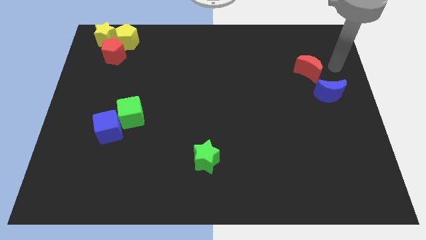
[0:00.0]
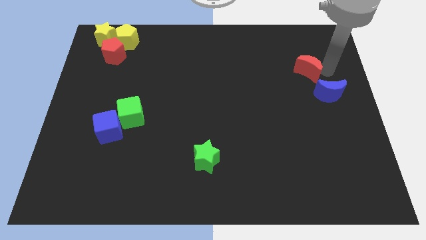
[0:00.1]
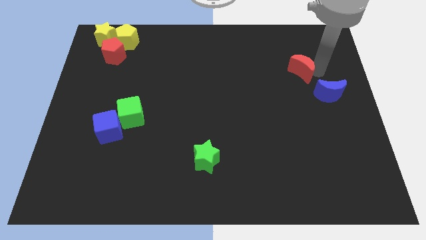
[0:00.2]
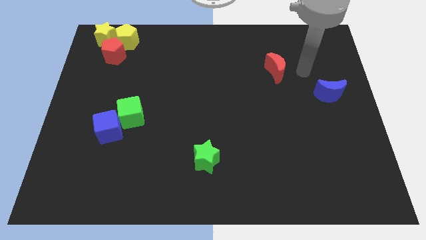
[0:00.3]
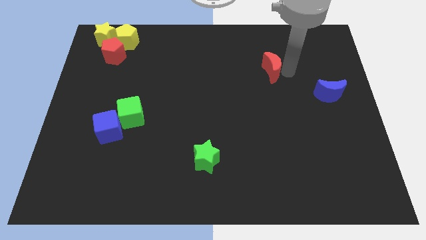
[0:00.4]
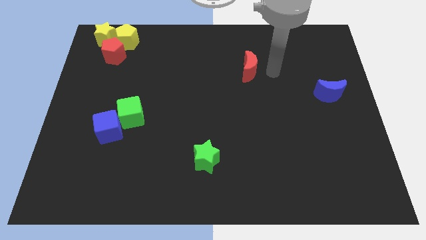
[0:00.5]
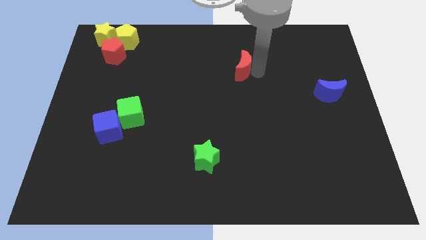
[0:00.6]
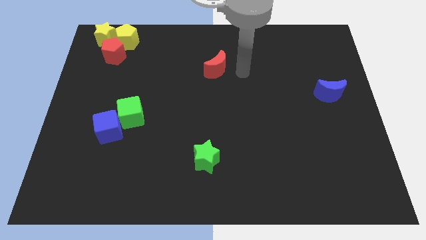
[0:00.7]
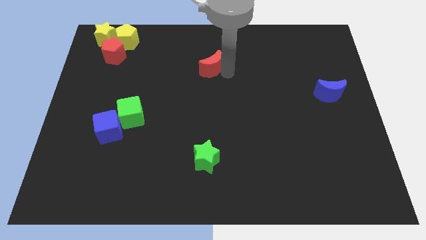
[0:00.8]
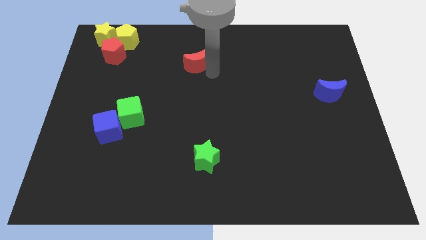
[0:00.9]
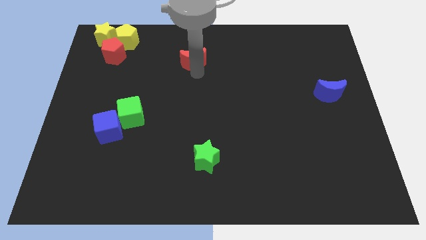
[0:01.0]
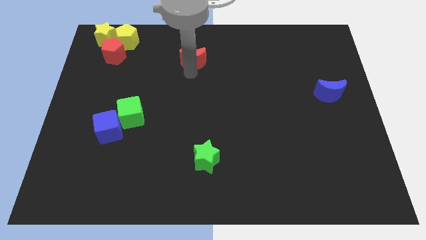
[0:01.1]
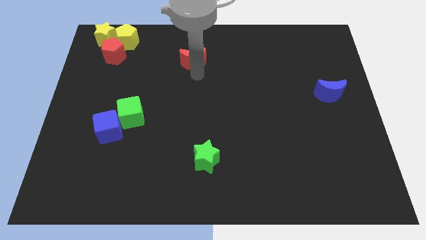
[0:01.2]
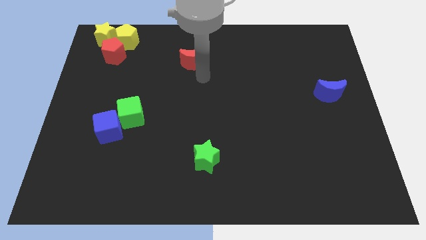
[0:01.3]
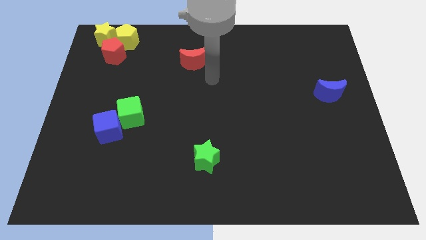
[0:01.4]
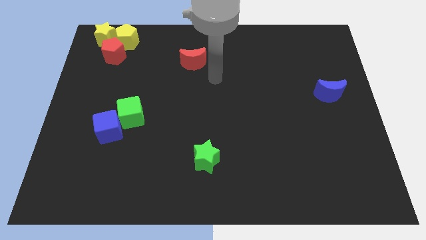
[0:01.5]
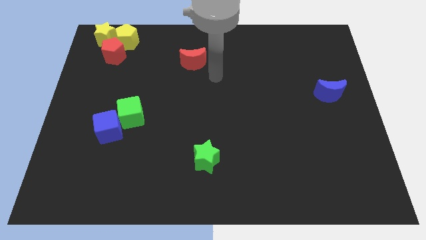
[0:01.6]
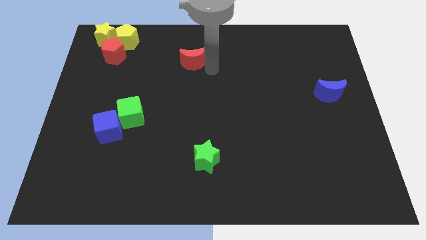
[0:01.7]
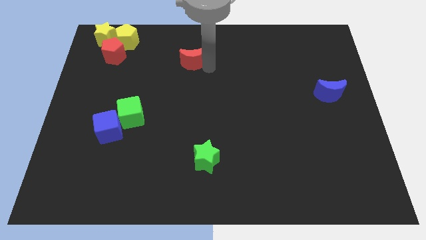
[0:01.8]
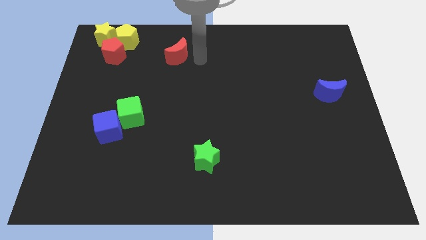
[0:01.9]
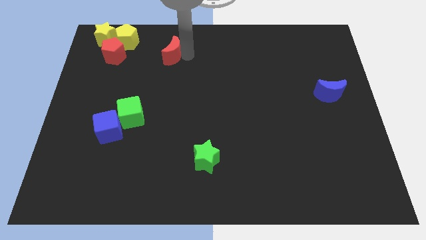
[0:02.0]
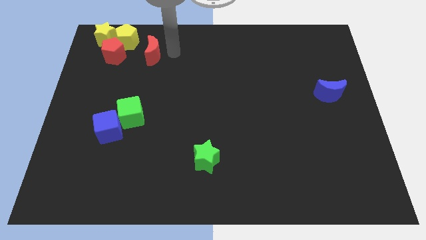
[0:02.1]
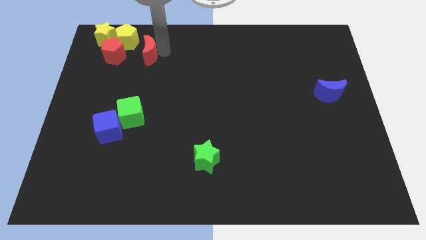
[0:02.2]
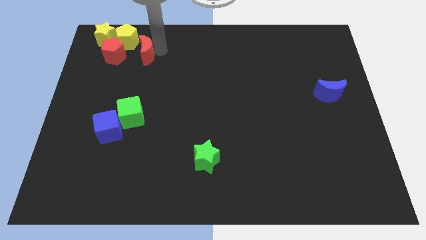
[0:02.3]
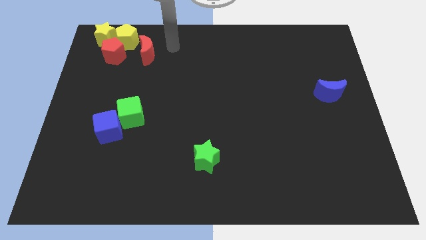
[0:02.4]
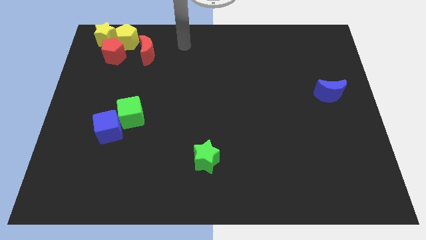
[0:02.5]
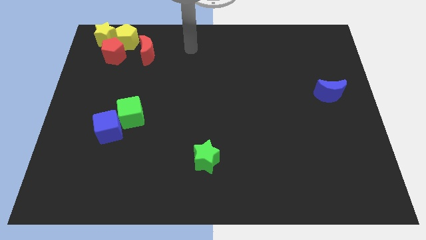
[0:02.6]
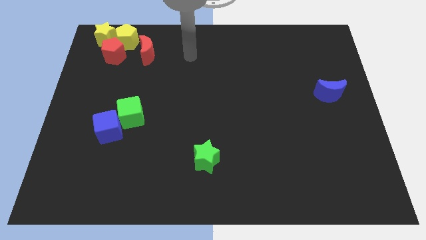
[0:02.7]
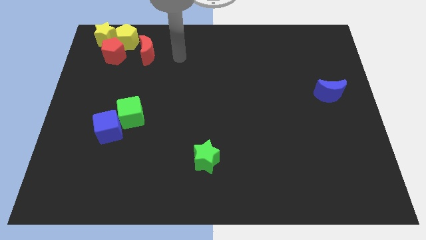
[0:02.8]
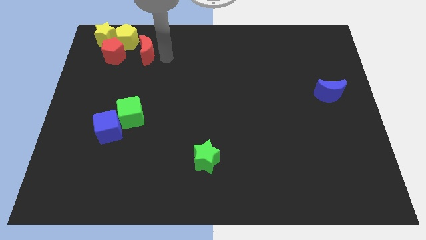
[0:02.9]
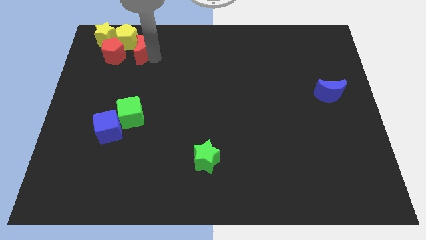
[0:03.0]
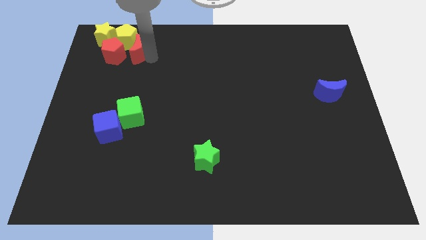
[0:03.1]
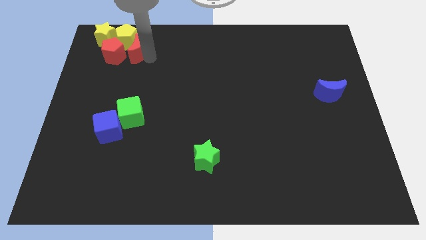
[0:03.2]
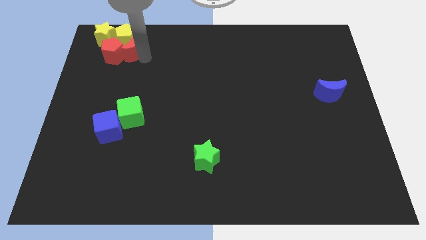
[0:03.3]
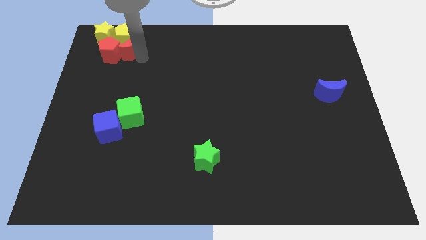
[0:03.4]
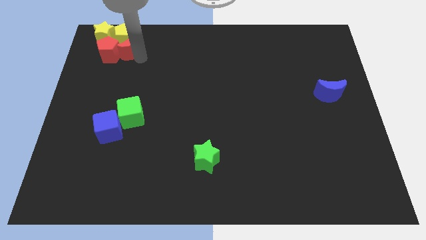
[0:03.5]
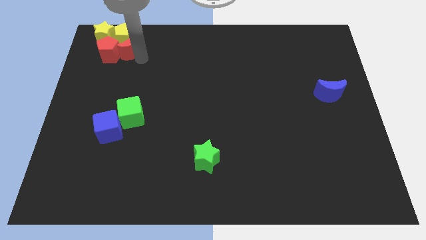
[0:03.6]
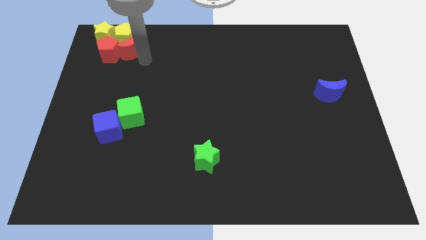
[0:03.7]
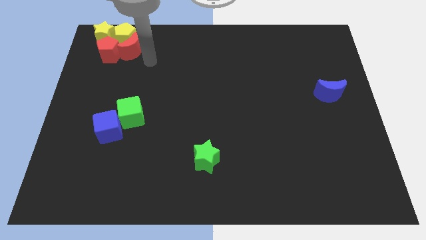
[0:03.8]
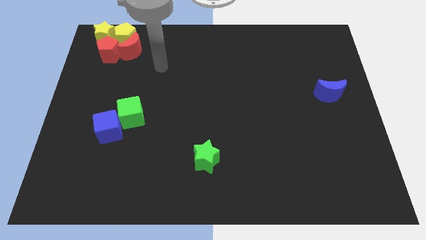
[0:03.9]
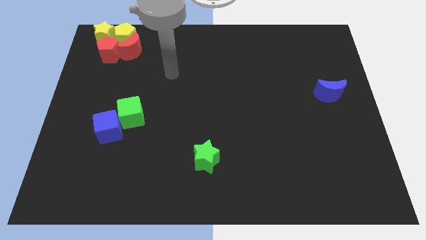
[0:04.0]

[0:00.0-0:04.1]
push the red crescent into the red pentagon

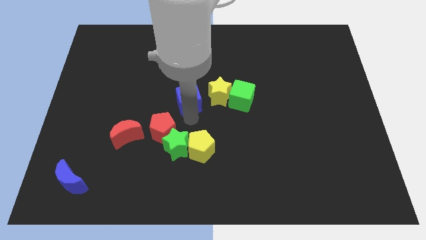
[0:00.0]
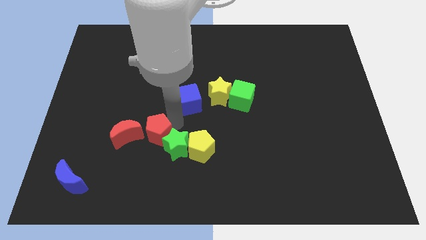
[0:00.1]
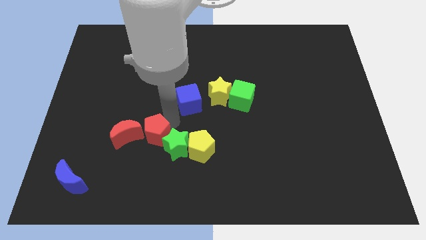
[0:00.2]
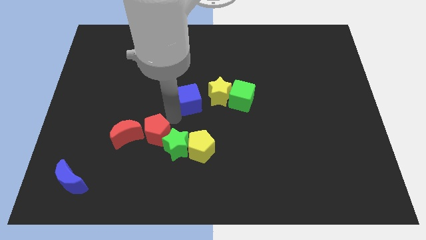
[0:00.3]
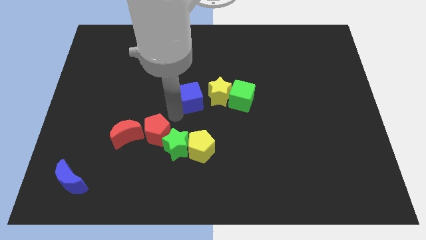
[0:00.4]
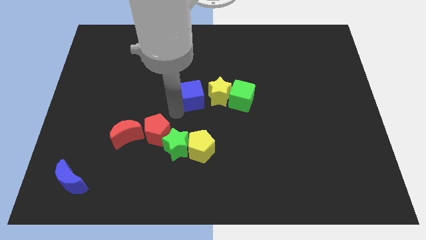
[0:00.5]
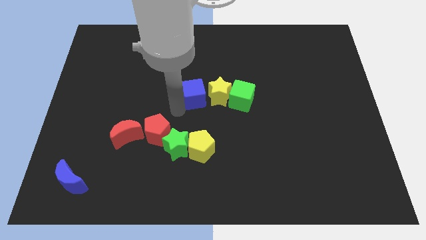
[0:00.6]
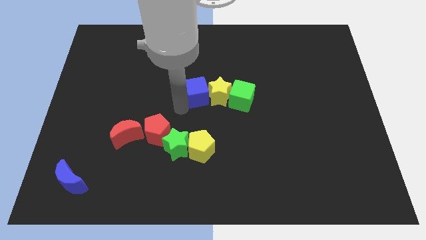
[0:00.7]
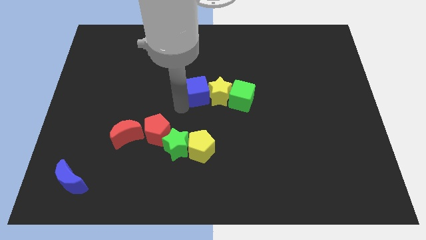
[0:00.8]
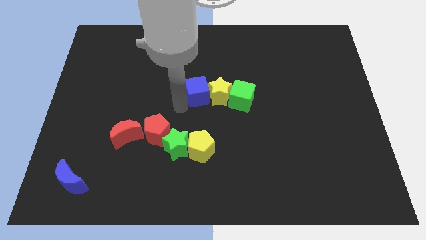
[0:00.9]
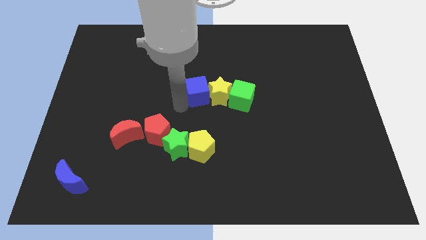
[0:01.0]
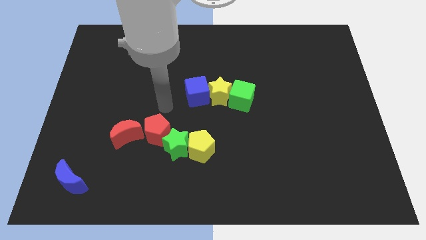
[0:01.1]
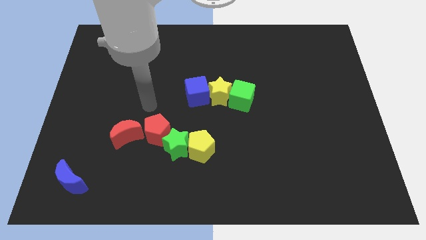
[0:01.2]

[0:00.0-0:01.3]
push the blue cube to the left of the yellow star

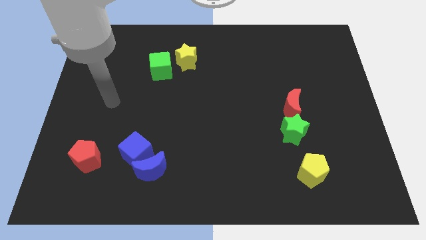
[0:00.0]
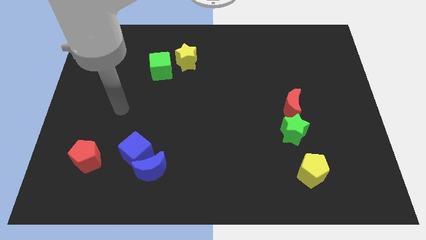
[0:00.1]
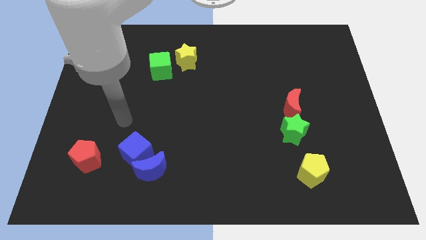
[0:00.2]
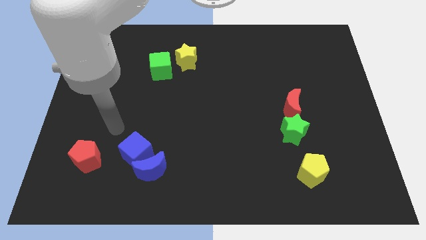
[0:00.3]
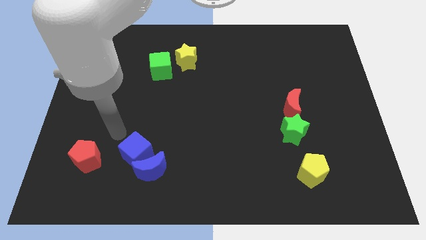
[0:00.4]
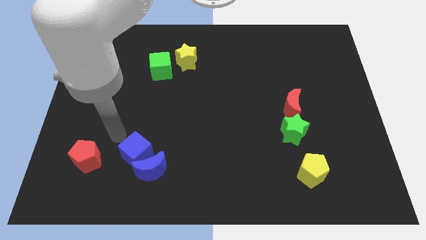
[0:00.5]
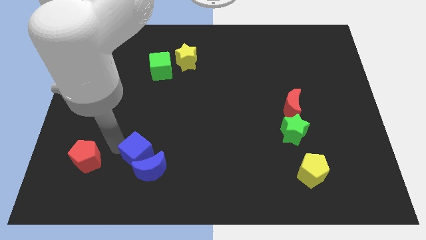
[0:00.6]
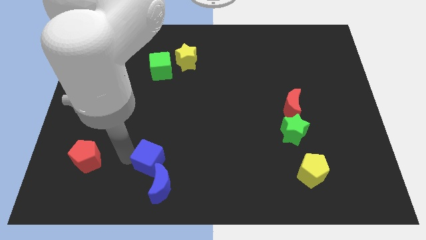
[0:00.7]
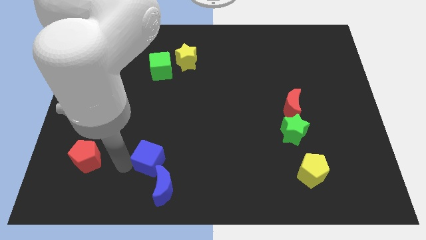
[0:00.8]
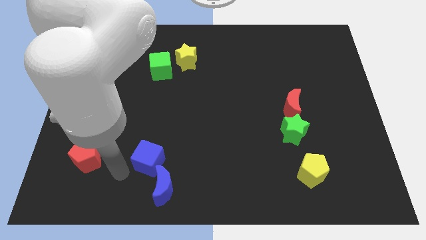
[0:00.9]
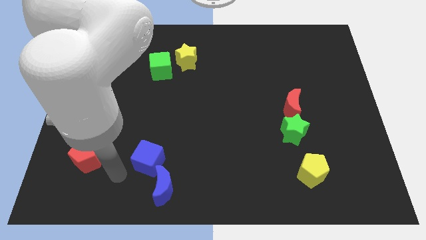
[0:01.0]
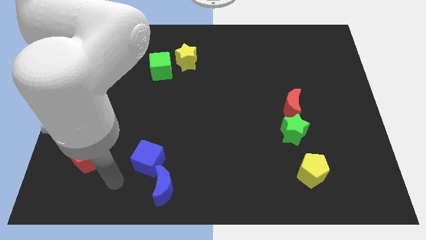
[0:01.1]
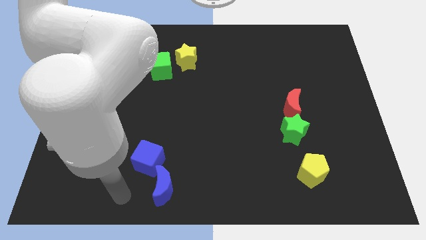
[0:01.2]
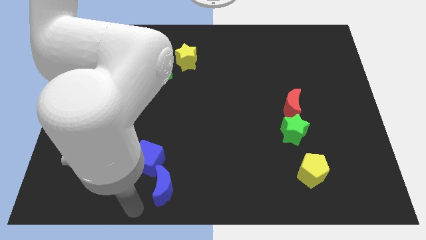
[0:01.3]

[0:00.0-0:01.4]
move the blue crescent to the bottom right side of the blue cube

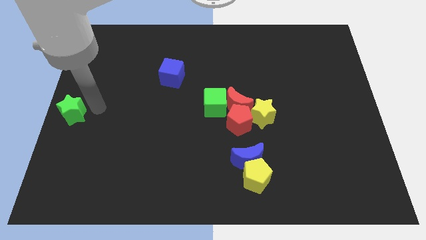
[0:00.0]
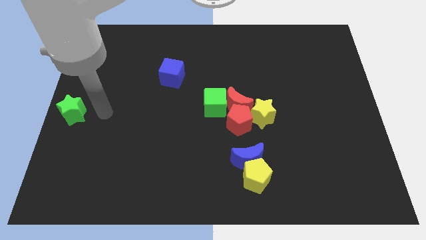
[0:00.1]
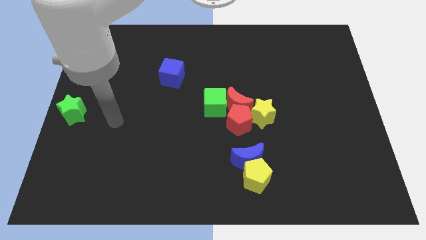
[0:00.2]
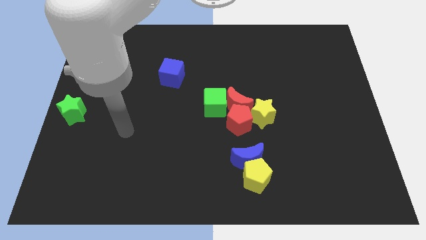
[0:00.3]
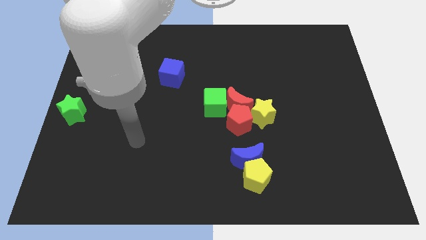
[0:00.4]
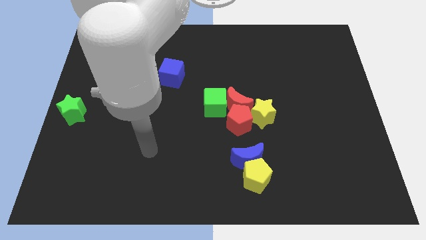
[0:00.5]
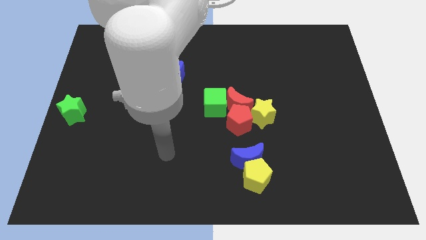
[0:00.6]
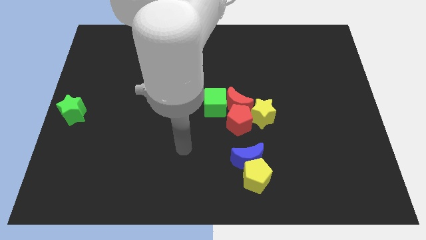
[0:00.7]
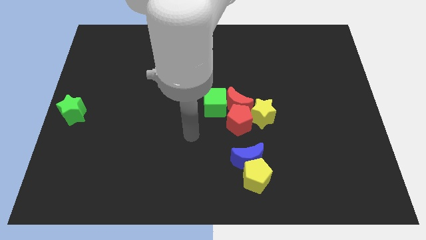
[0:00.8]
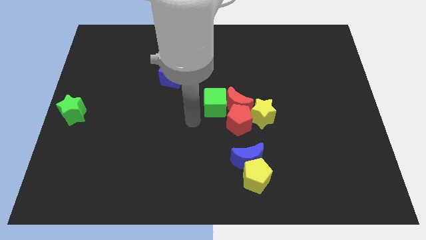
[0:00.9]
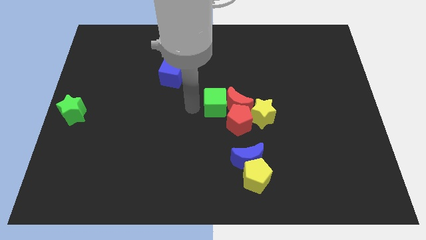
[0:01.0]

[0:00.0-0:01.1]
point your arm at the left of the green cube

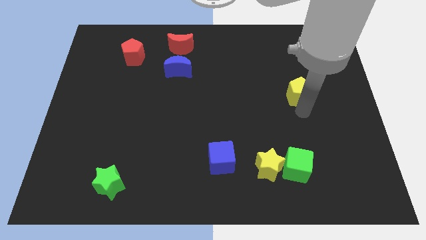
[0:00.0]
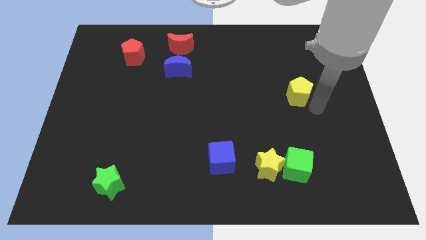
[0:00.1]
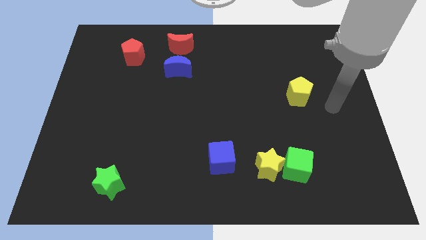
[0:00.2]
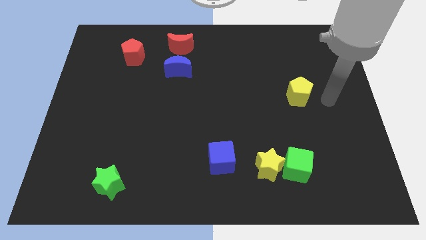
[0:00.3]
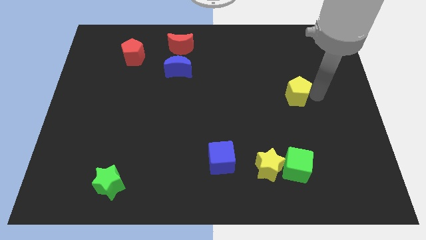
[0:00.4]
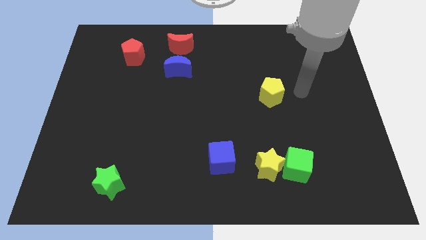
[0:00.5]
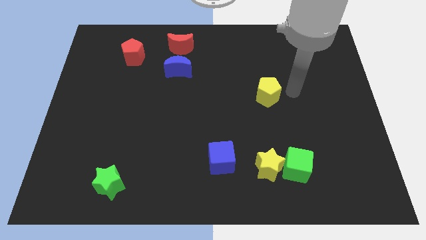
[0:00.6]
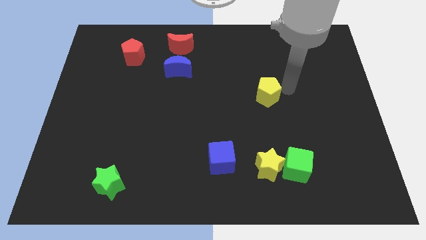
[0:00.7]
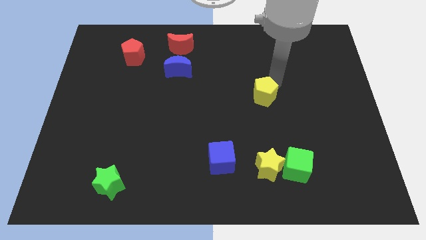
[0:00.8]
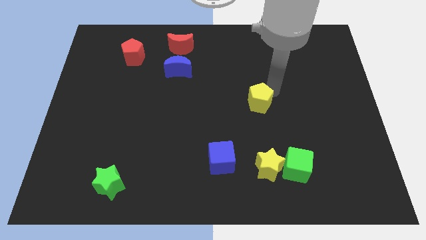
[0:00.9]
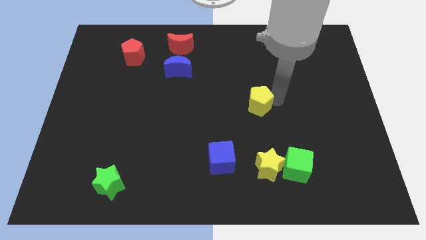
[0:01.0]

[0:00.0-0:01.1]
move the yellow pentagon to the left of the board
